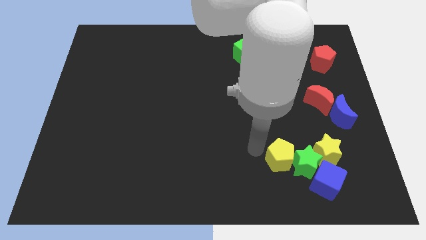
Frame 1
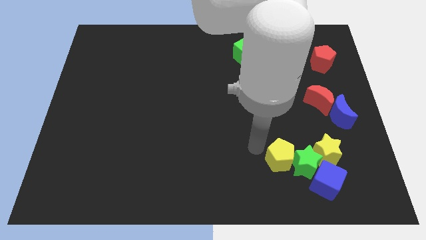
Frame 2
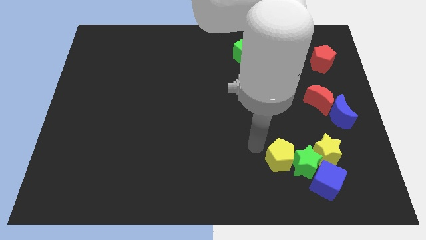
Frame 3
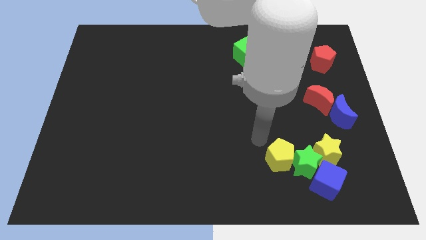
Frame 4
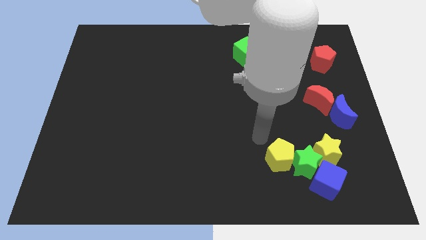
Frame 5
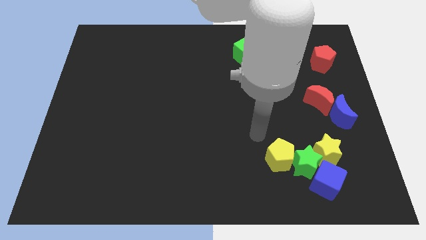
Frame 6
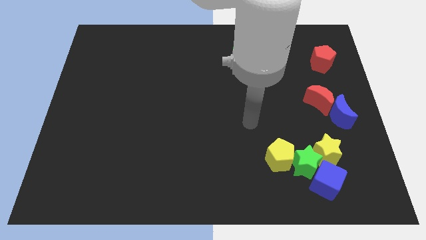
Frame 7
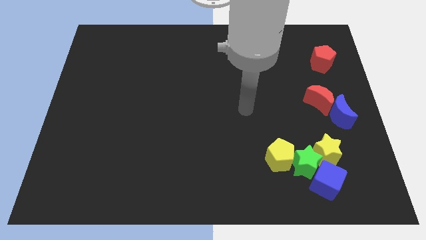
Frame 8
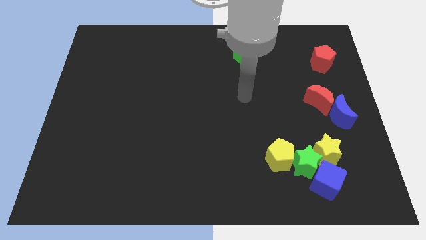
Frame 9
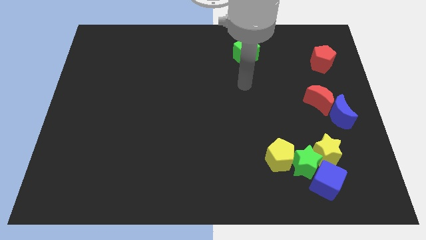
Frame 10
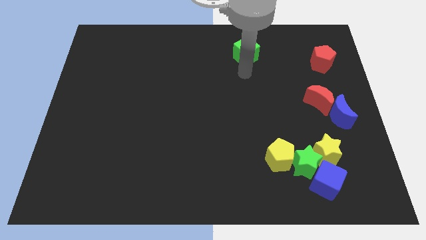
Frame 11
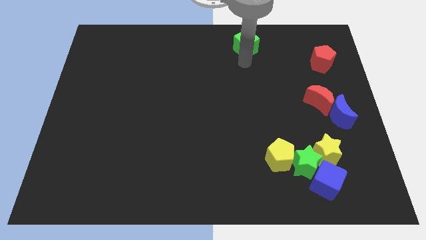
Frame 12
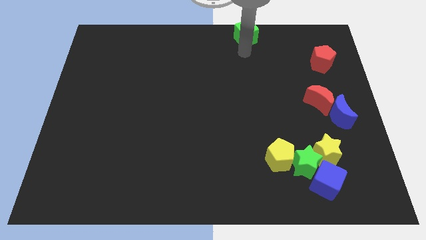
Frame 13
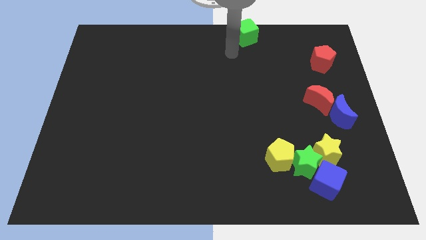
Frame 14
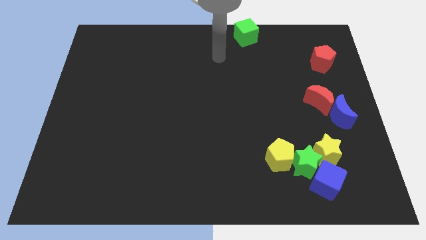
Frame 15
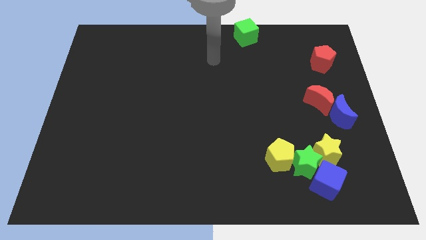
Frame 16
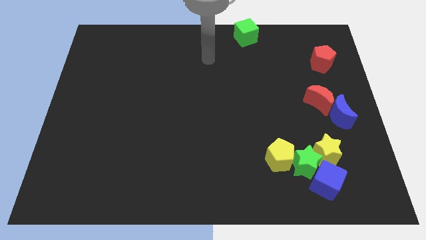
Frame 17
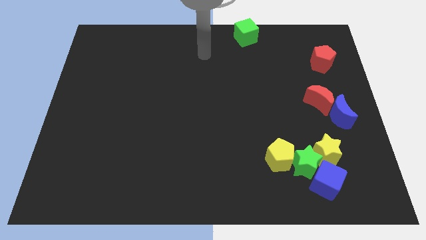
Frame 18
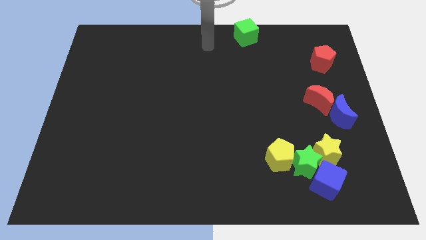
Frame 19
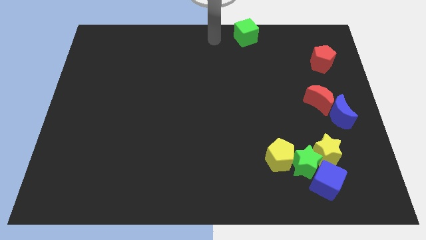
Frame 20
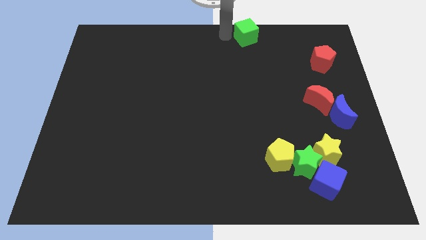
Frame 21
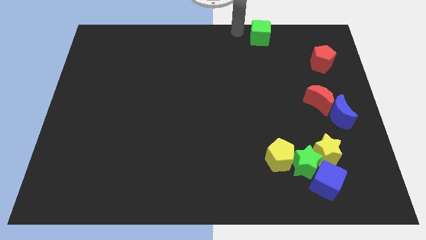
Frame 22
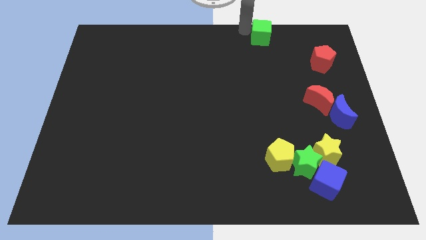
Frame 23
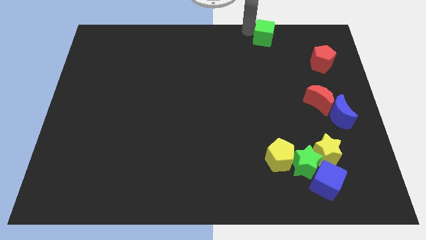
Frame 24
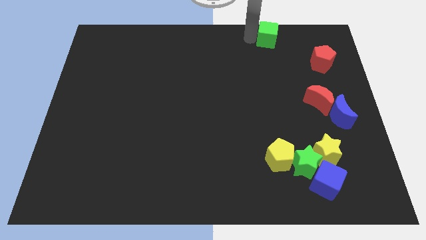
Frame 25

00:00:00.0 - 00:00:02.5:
move your arm and move the green cube towards top and right

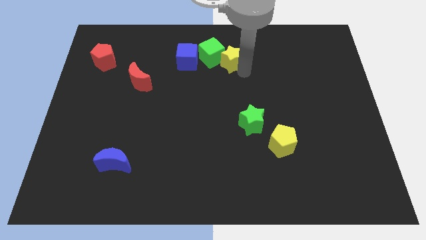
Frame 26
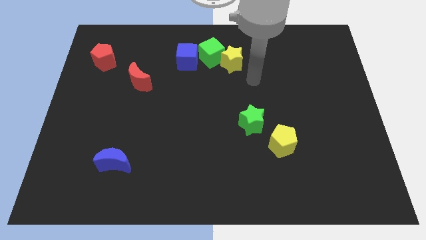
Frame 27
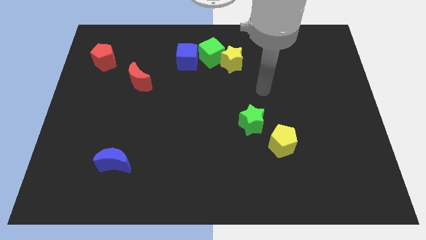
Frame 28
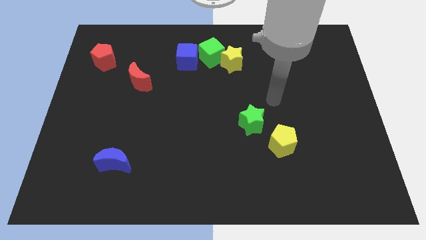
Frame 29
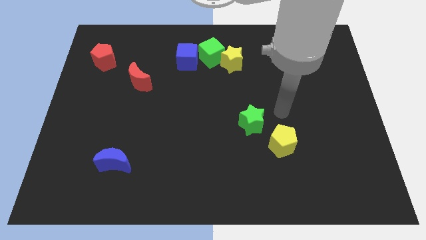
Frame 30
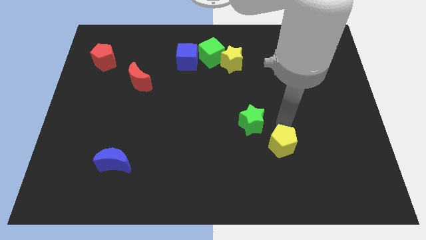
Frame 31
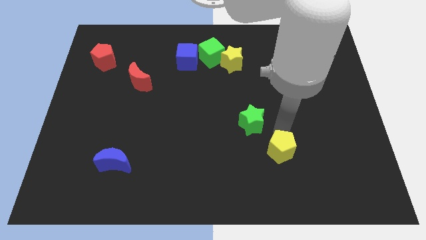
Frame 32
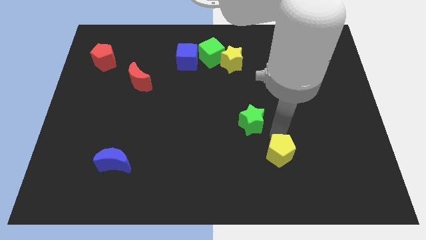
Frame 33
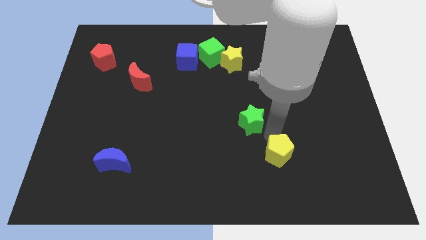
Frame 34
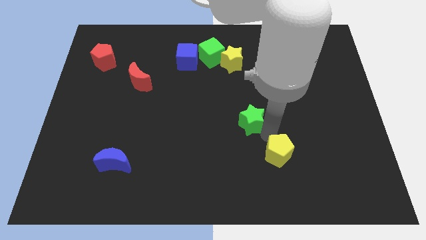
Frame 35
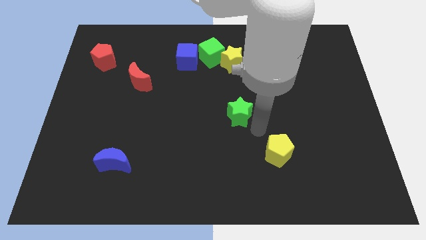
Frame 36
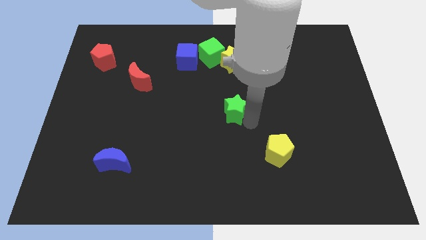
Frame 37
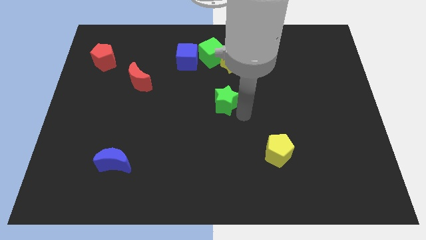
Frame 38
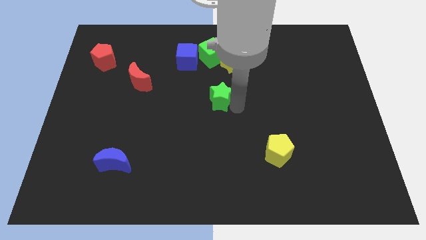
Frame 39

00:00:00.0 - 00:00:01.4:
push the green star near the bottom to the yellow star

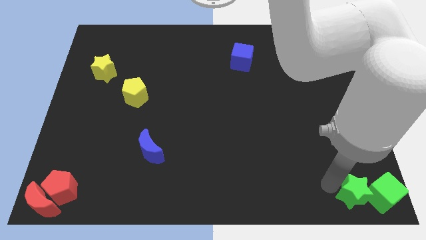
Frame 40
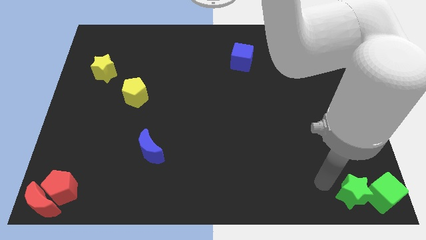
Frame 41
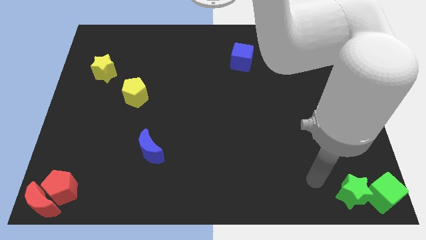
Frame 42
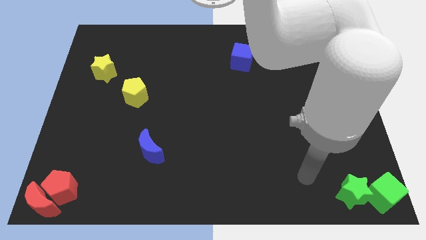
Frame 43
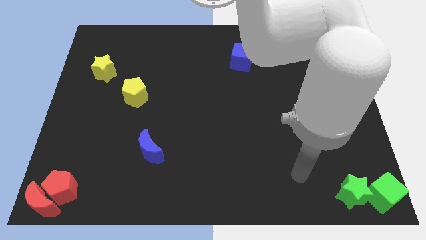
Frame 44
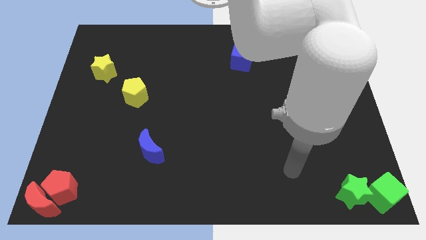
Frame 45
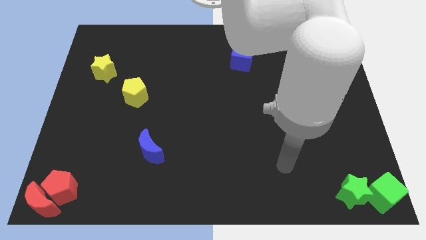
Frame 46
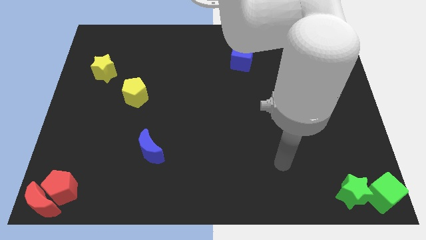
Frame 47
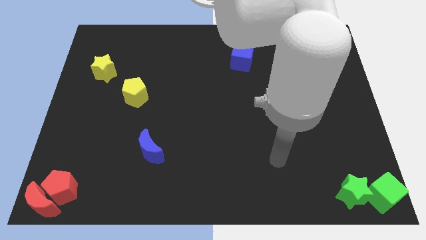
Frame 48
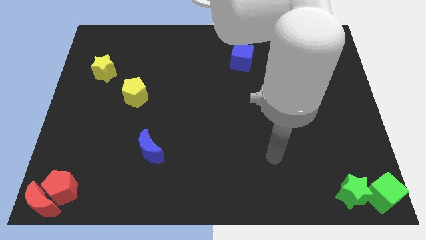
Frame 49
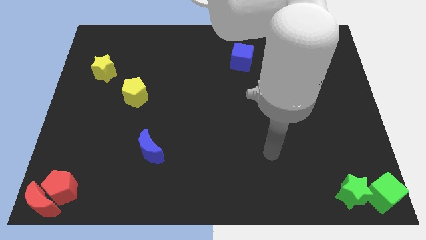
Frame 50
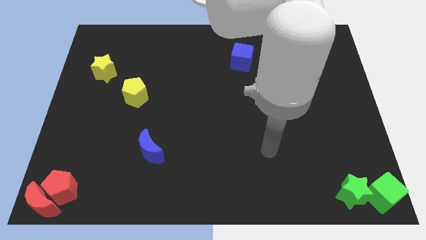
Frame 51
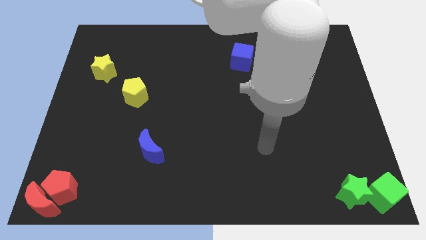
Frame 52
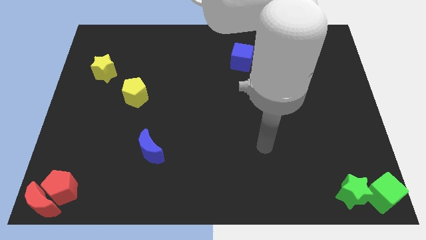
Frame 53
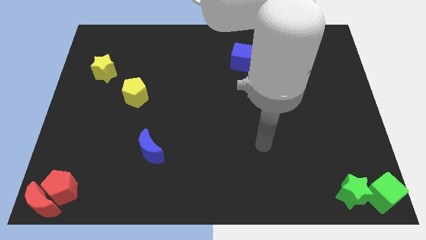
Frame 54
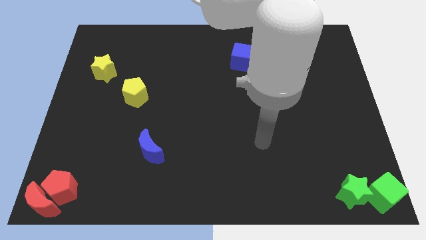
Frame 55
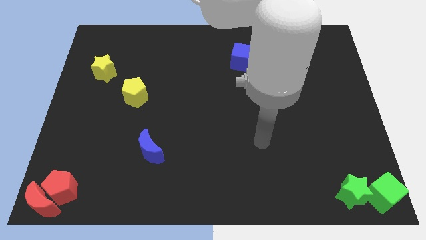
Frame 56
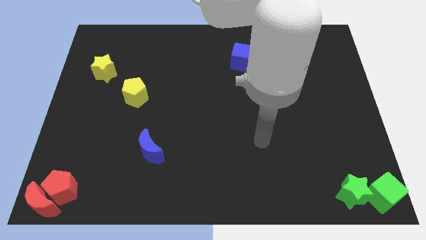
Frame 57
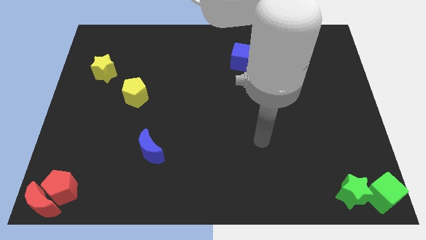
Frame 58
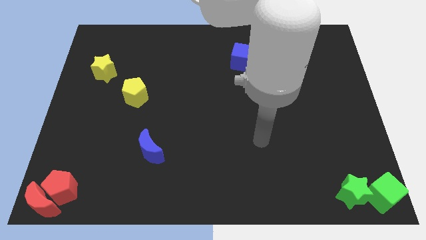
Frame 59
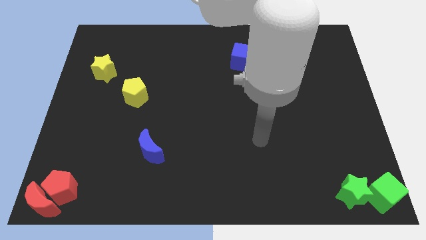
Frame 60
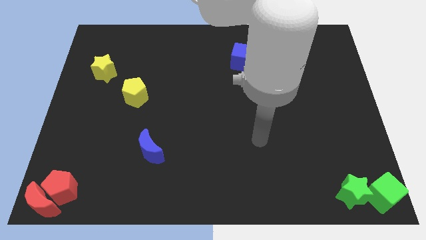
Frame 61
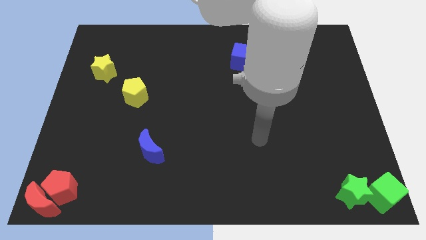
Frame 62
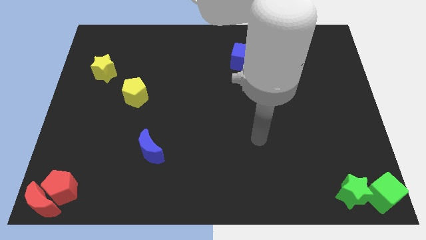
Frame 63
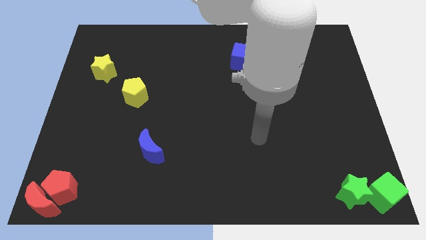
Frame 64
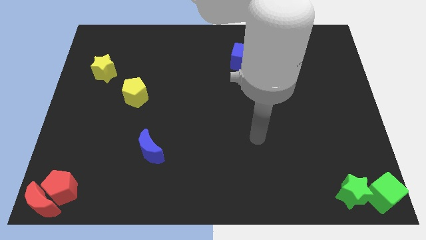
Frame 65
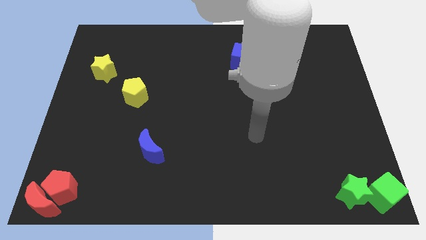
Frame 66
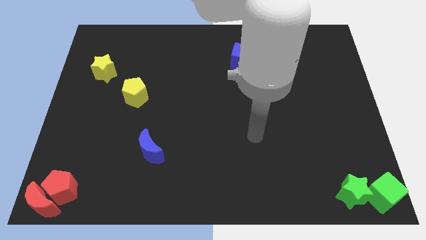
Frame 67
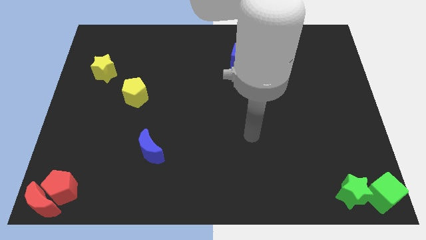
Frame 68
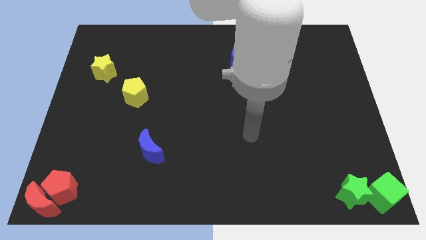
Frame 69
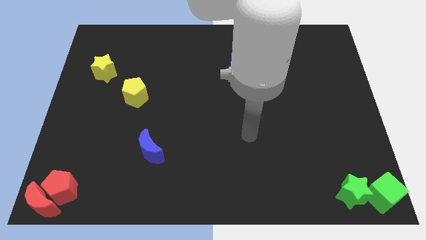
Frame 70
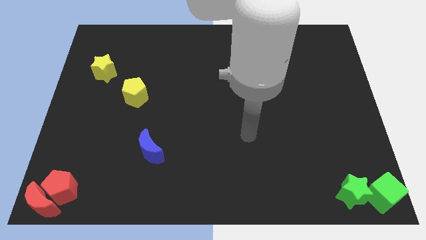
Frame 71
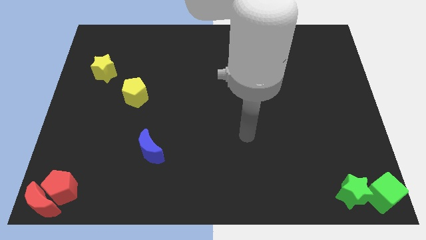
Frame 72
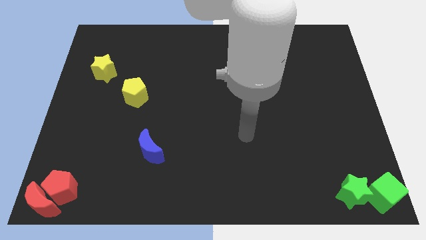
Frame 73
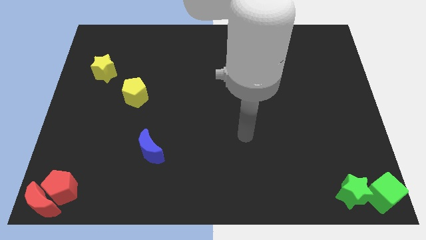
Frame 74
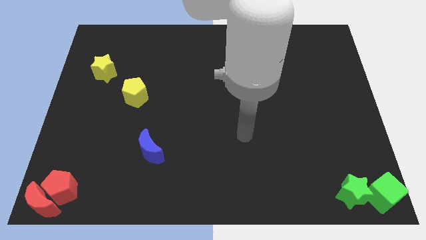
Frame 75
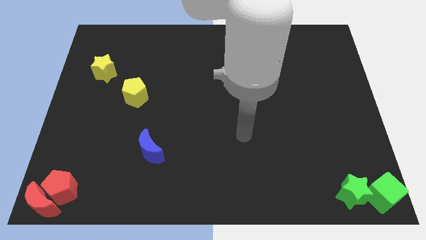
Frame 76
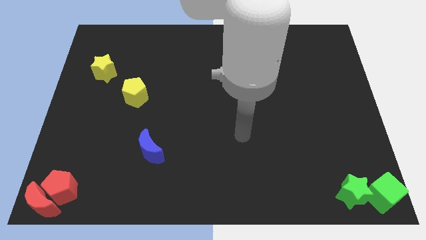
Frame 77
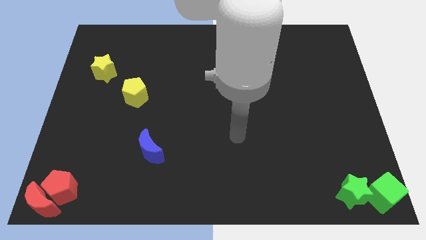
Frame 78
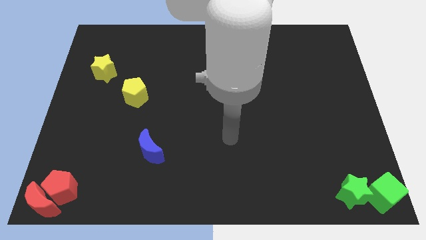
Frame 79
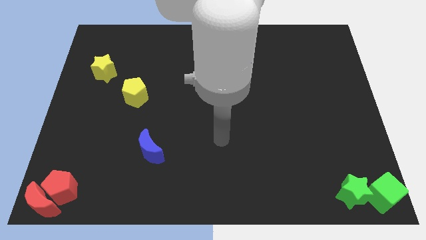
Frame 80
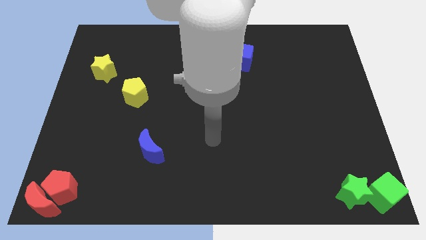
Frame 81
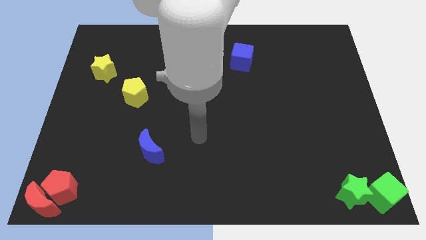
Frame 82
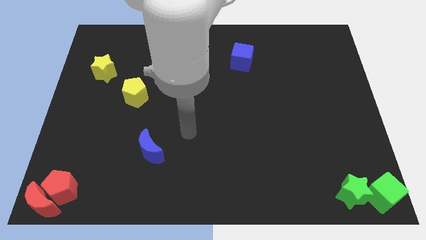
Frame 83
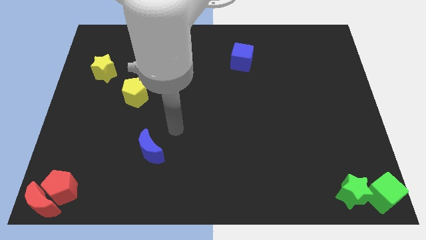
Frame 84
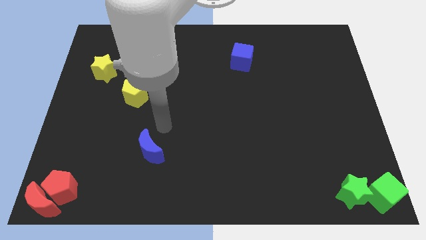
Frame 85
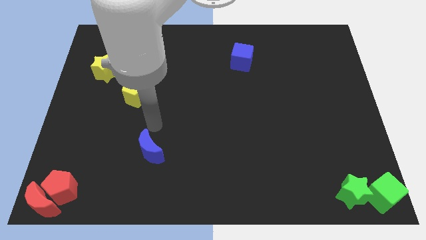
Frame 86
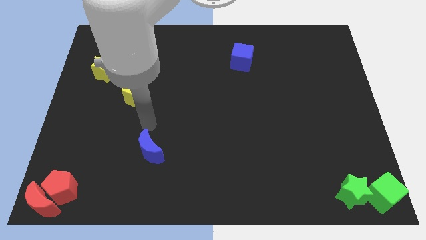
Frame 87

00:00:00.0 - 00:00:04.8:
move your arm to the top of the blue crescent
